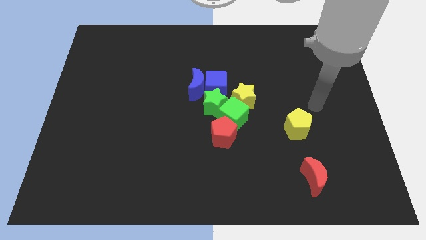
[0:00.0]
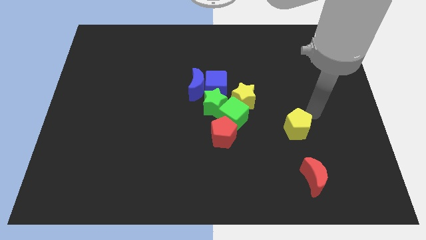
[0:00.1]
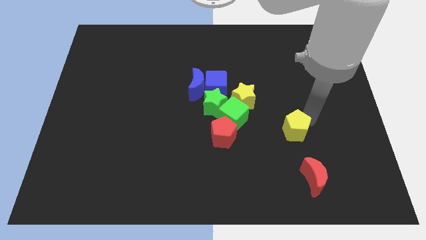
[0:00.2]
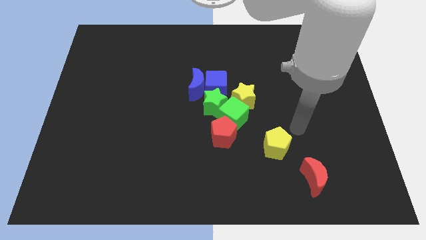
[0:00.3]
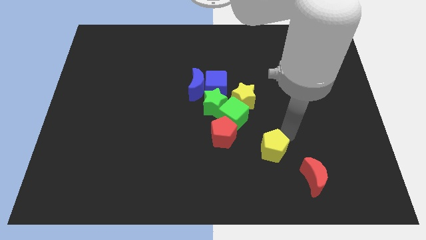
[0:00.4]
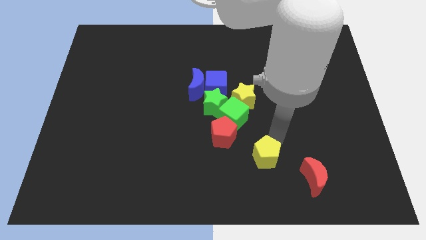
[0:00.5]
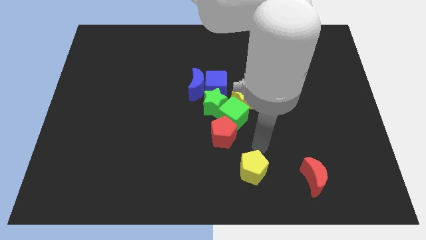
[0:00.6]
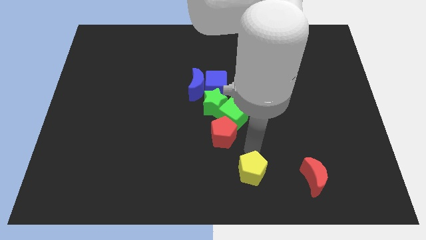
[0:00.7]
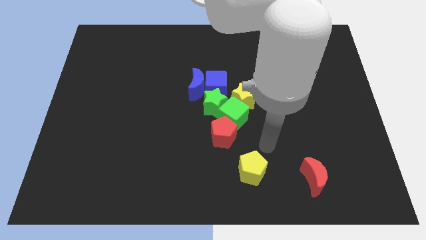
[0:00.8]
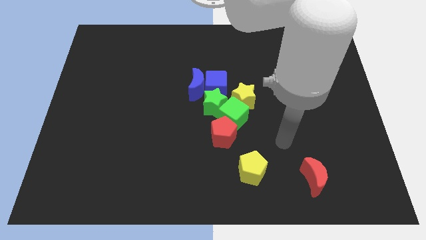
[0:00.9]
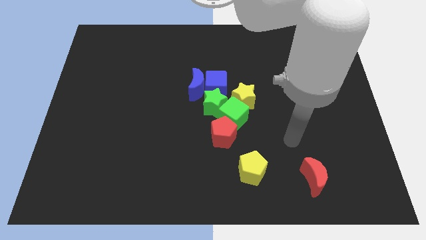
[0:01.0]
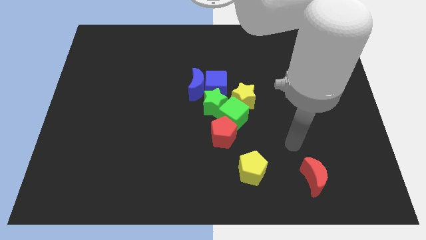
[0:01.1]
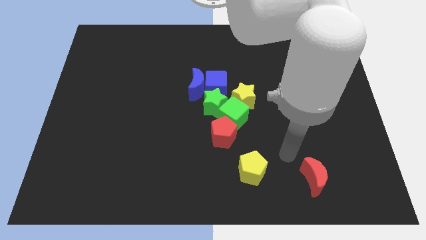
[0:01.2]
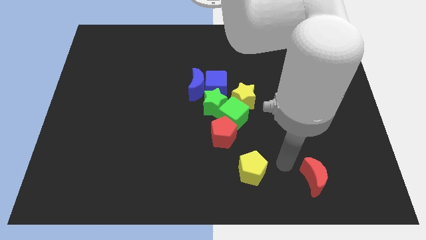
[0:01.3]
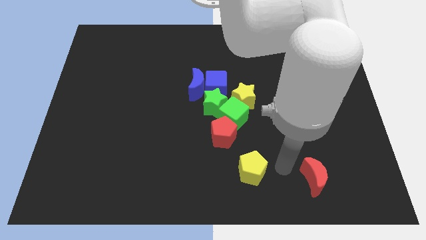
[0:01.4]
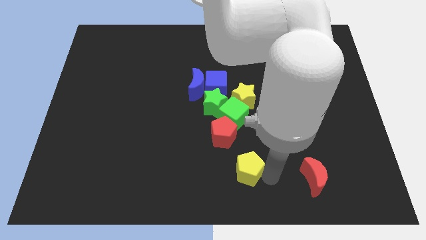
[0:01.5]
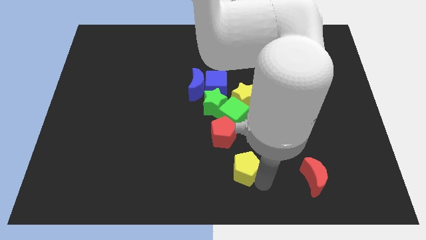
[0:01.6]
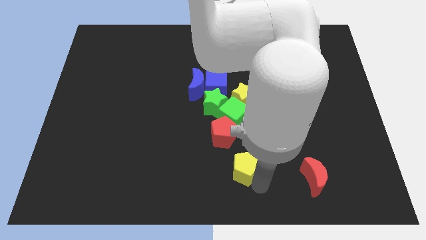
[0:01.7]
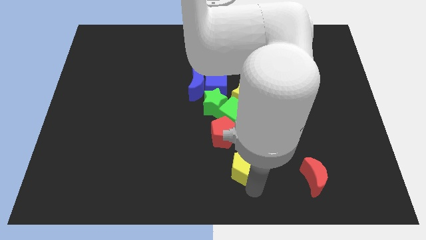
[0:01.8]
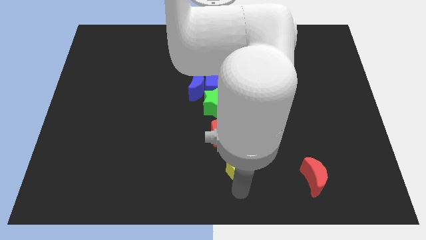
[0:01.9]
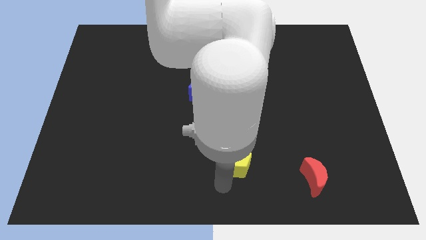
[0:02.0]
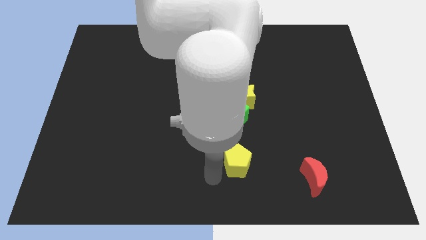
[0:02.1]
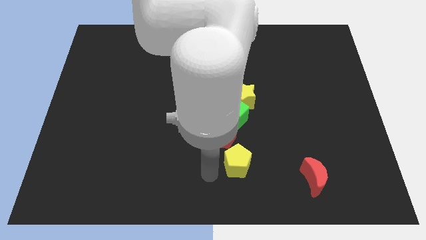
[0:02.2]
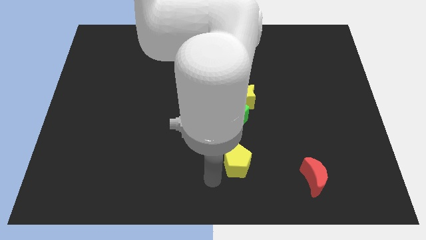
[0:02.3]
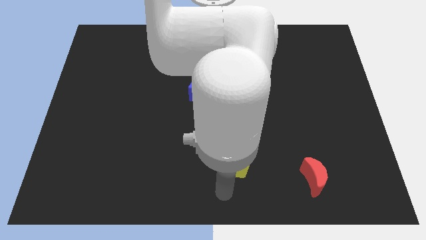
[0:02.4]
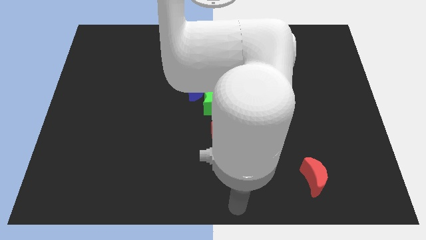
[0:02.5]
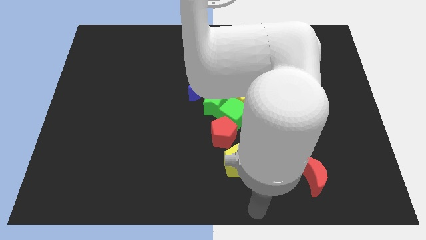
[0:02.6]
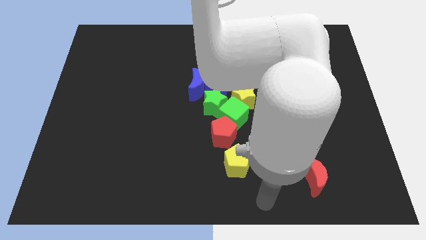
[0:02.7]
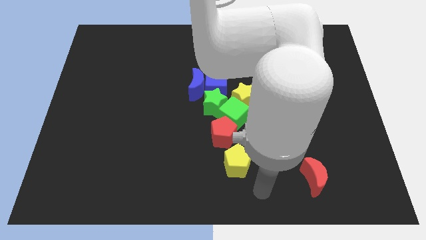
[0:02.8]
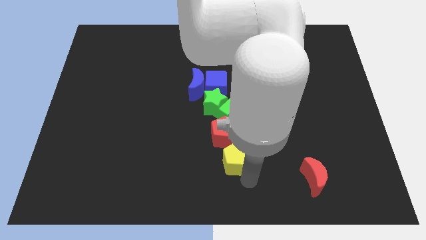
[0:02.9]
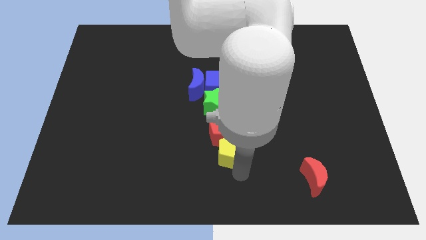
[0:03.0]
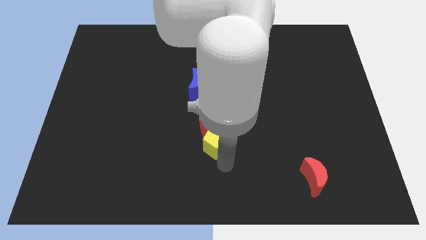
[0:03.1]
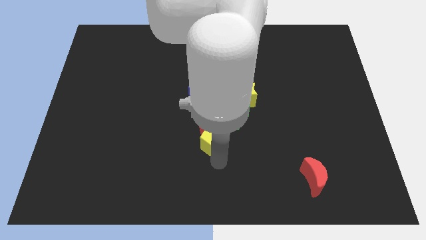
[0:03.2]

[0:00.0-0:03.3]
move the yellow pentagon into the red pentagon

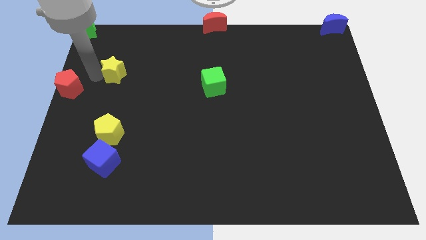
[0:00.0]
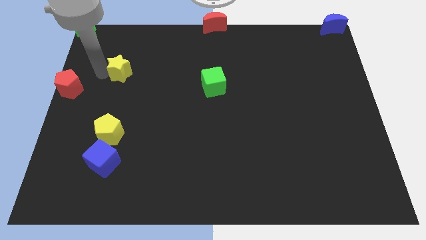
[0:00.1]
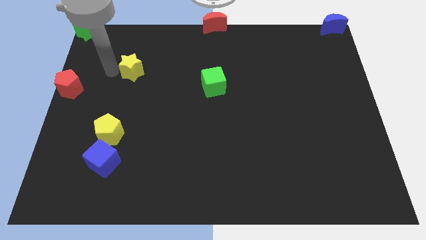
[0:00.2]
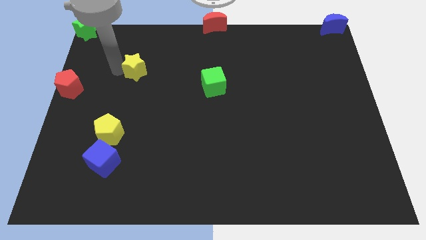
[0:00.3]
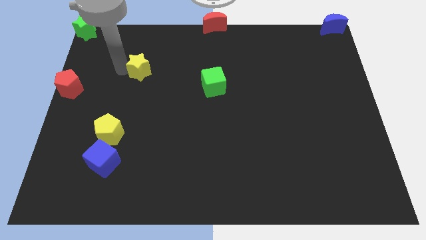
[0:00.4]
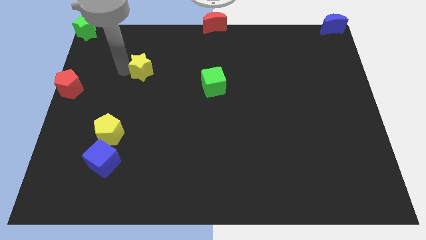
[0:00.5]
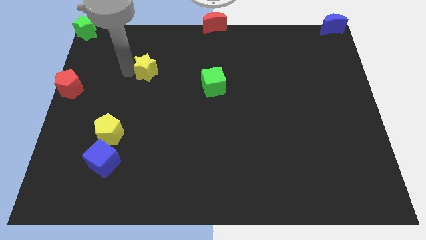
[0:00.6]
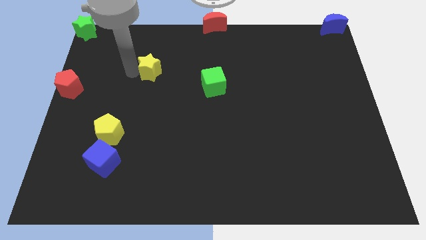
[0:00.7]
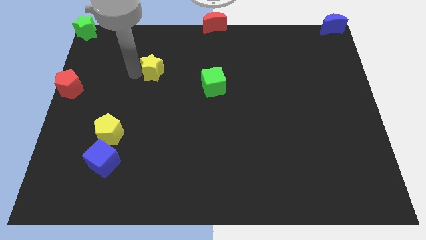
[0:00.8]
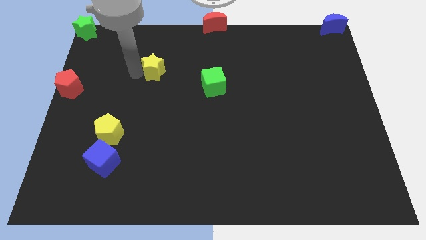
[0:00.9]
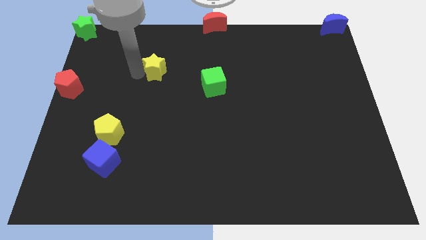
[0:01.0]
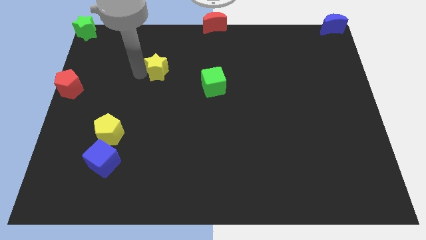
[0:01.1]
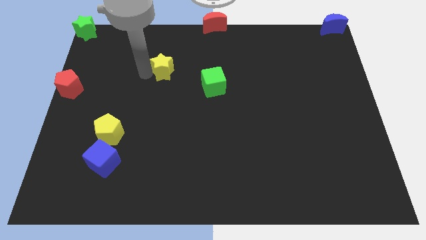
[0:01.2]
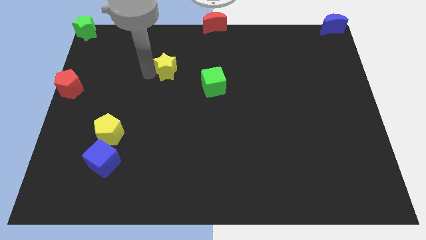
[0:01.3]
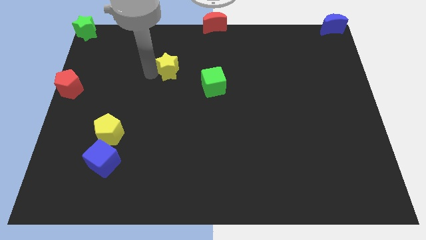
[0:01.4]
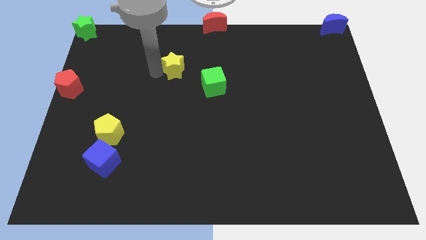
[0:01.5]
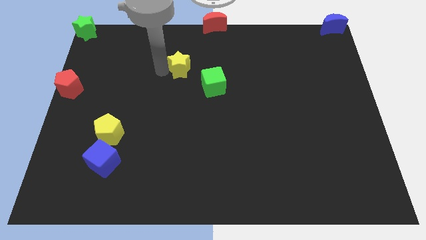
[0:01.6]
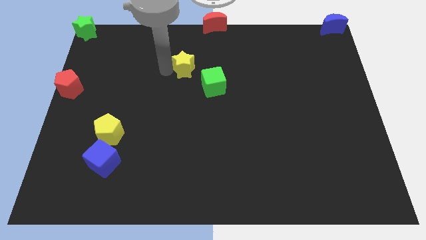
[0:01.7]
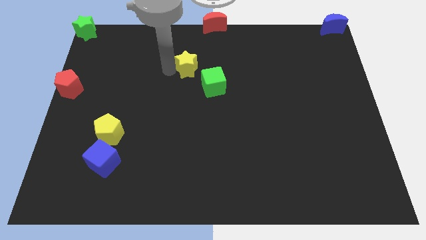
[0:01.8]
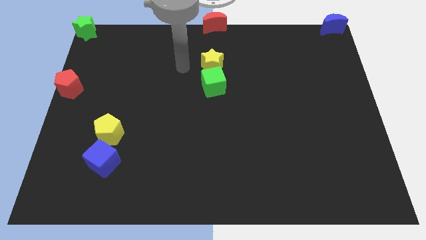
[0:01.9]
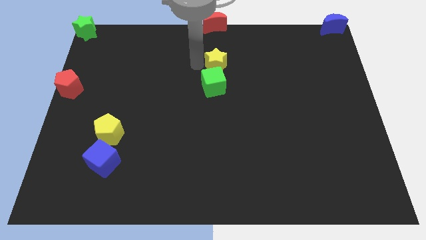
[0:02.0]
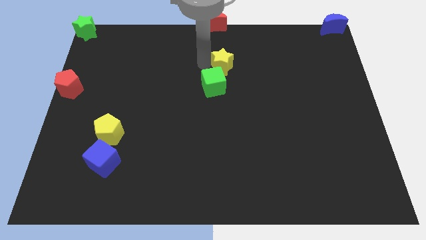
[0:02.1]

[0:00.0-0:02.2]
push the yellow star to the top of the green cube

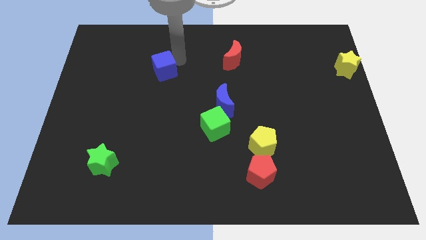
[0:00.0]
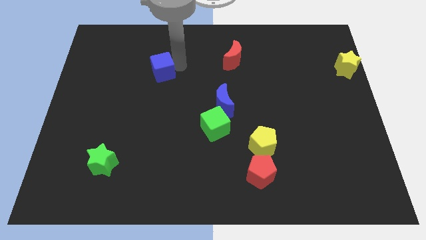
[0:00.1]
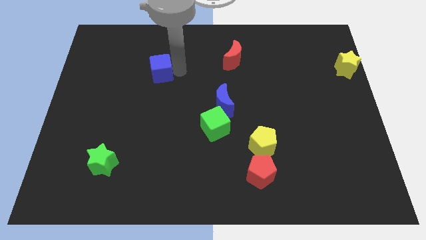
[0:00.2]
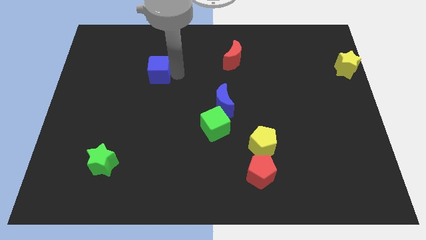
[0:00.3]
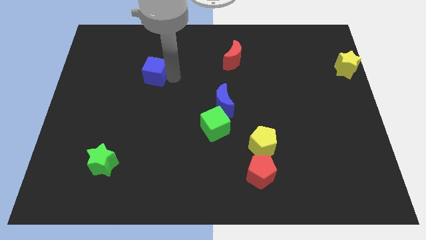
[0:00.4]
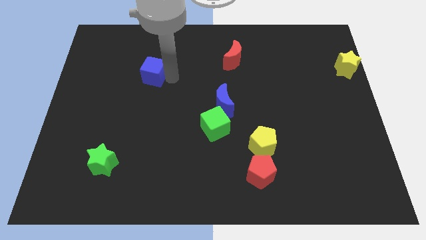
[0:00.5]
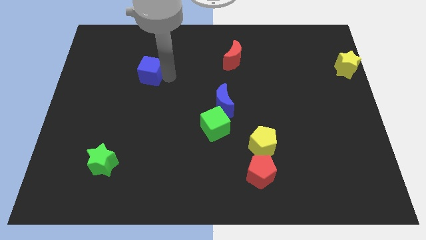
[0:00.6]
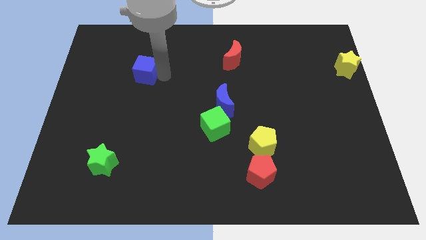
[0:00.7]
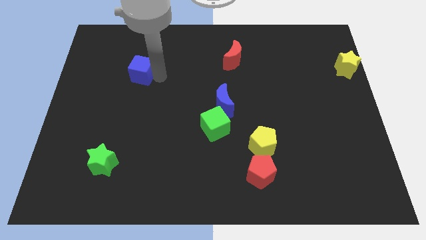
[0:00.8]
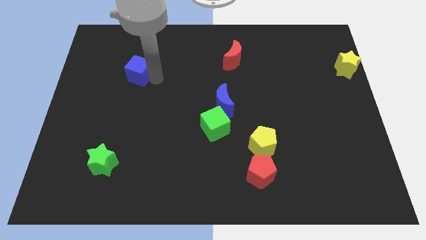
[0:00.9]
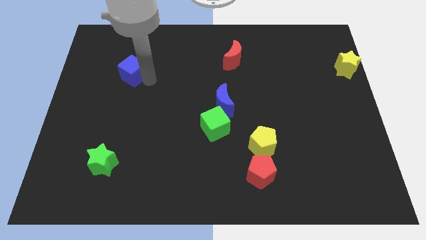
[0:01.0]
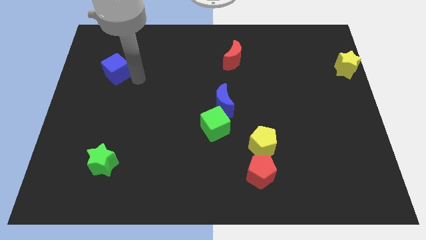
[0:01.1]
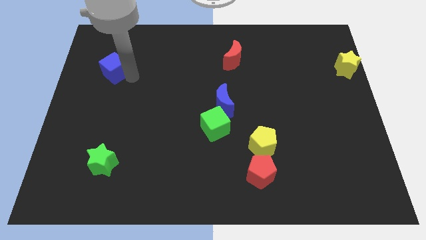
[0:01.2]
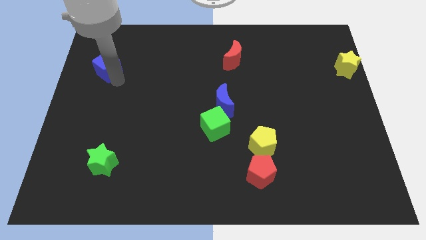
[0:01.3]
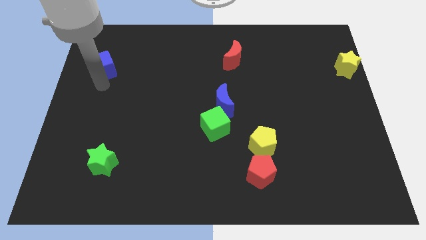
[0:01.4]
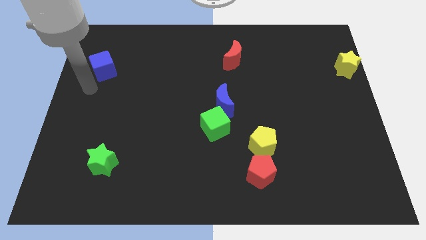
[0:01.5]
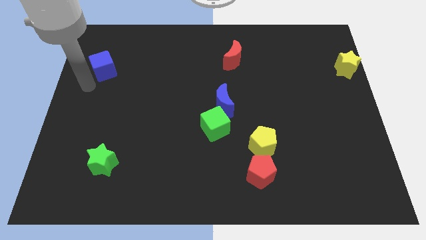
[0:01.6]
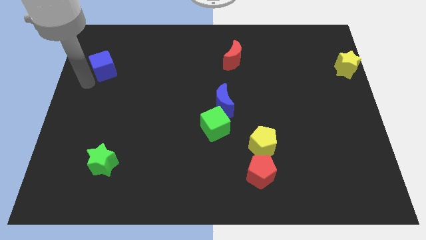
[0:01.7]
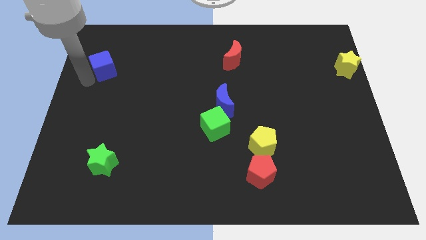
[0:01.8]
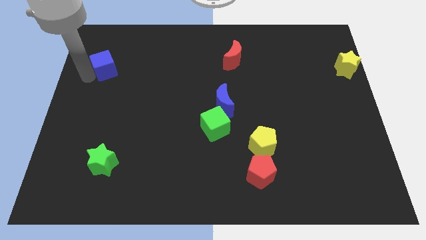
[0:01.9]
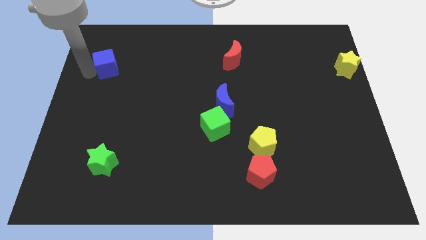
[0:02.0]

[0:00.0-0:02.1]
slide blue cube towards top left

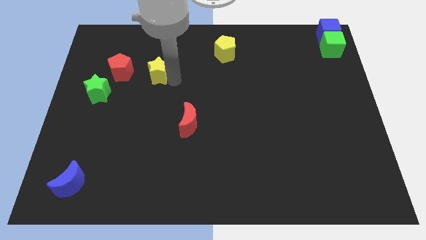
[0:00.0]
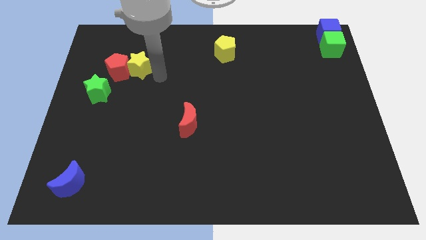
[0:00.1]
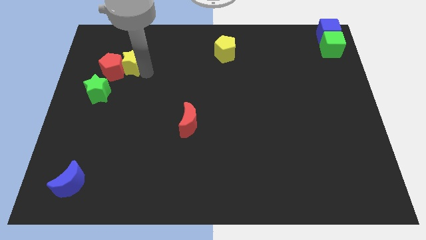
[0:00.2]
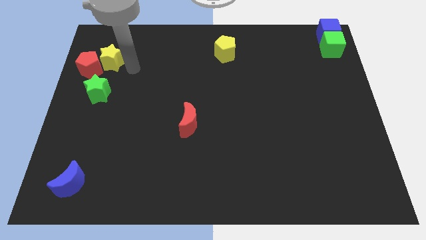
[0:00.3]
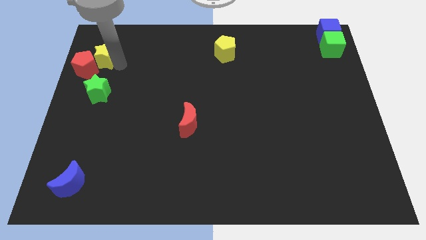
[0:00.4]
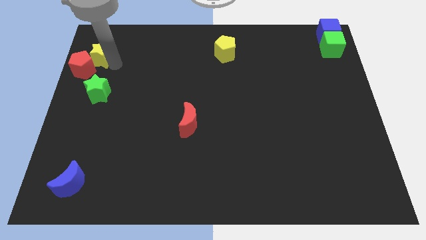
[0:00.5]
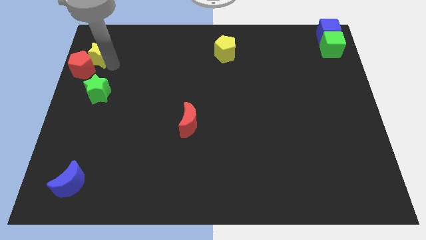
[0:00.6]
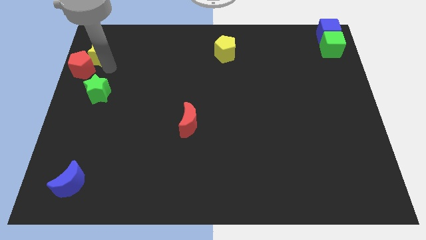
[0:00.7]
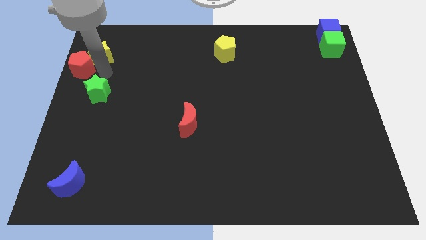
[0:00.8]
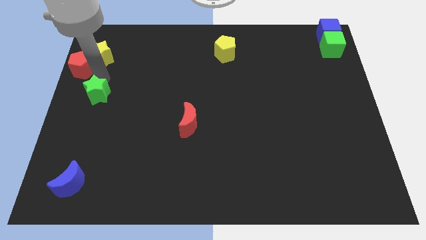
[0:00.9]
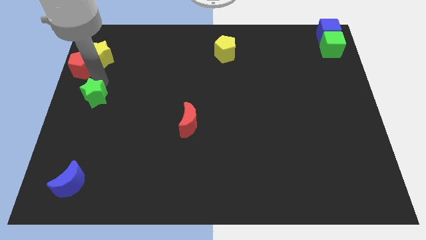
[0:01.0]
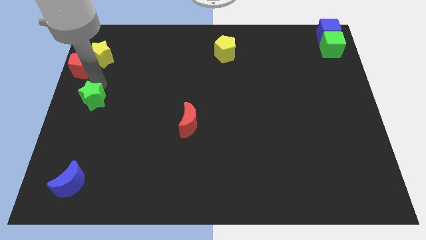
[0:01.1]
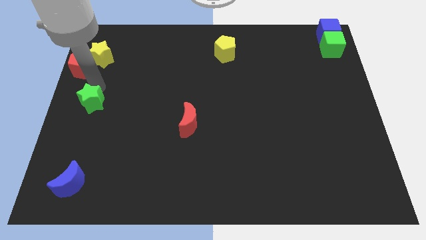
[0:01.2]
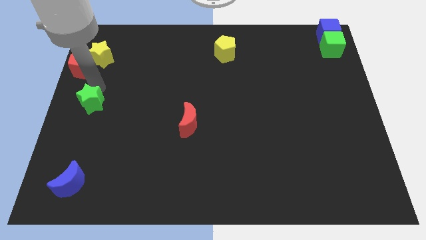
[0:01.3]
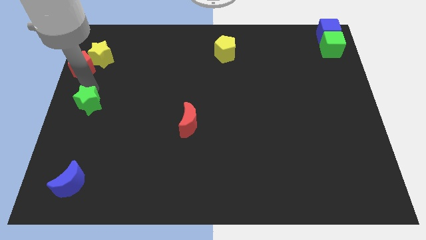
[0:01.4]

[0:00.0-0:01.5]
put the yellow star into the red pentagon

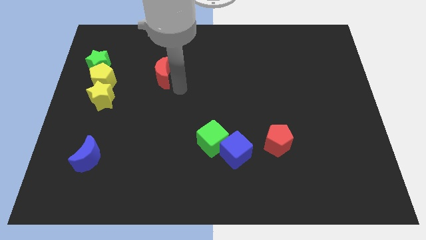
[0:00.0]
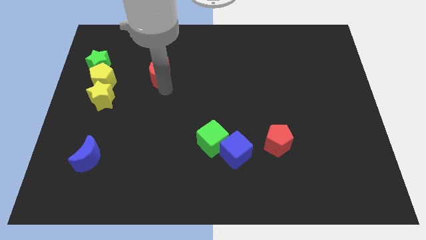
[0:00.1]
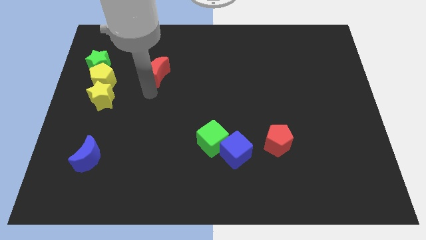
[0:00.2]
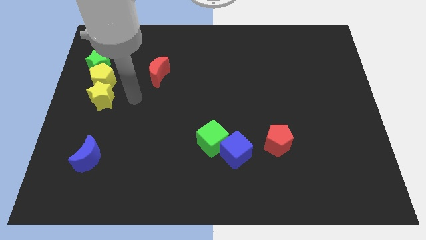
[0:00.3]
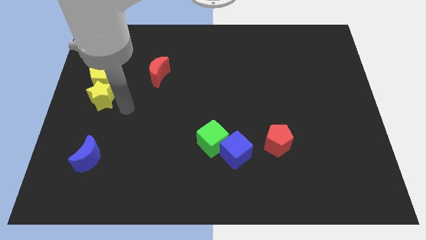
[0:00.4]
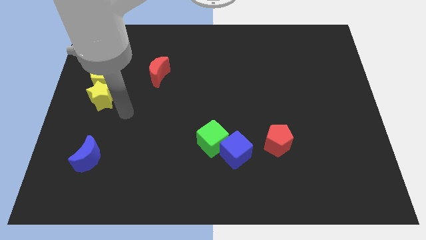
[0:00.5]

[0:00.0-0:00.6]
touch the bottom of red crescent
